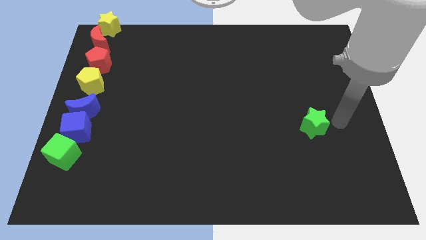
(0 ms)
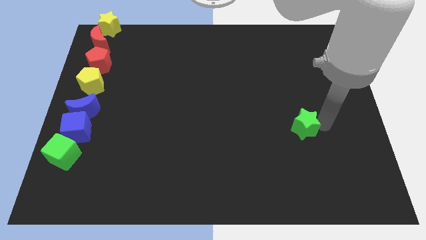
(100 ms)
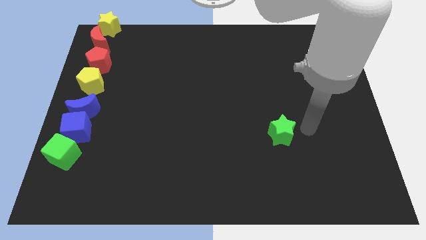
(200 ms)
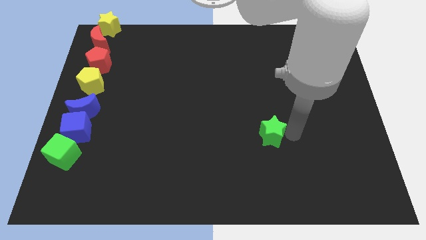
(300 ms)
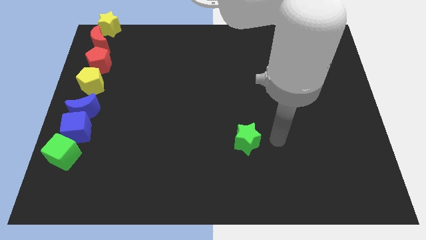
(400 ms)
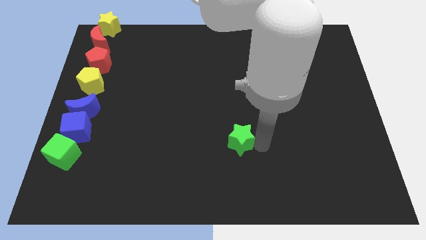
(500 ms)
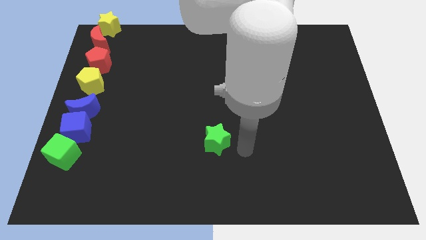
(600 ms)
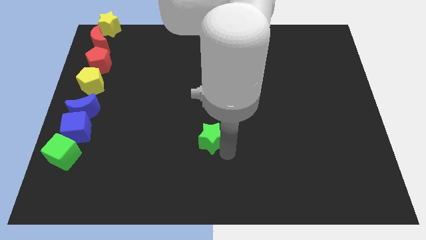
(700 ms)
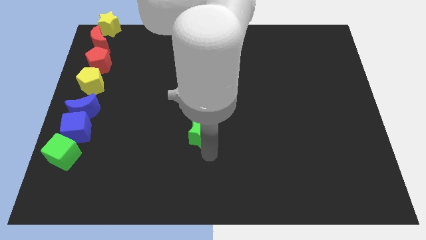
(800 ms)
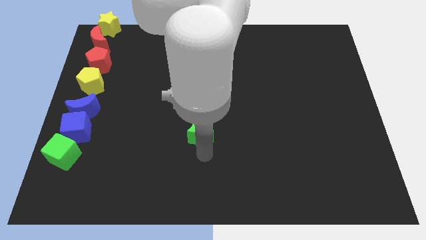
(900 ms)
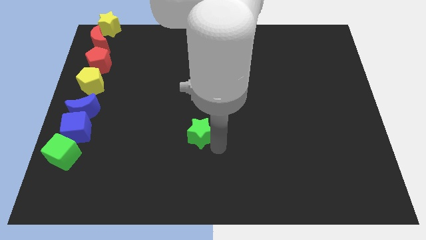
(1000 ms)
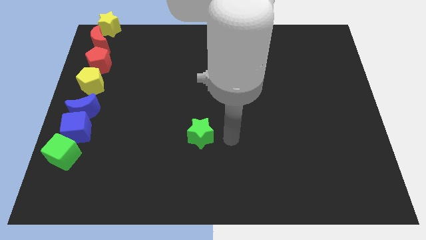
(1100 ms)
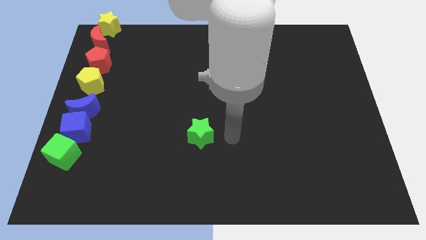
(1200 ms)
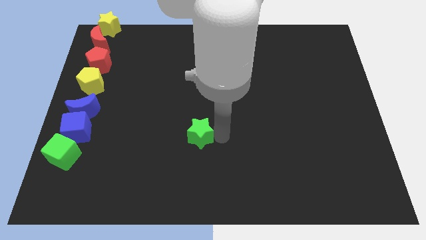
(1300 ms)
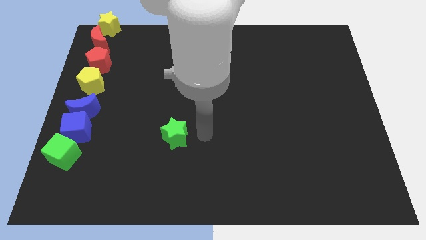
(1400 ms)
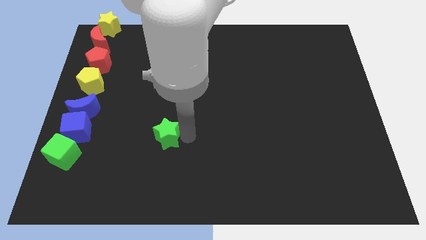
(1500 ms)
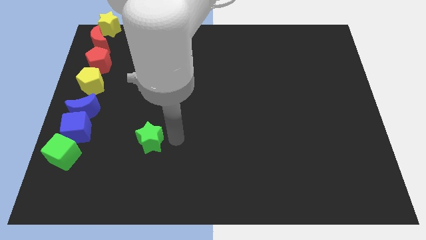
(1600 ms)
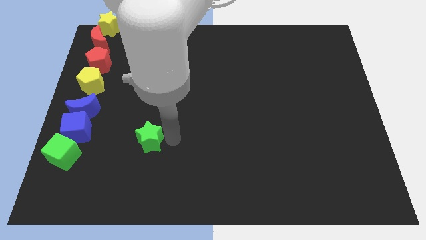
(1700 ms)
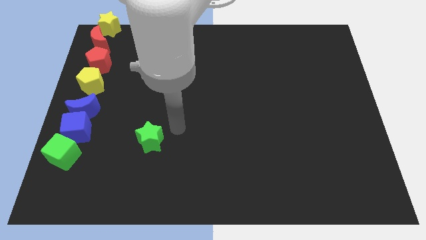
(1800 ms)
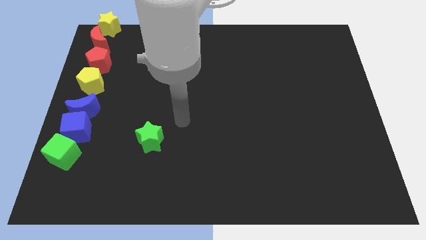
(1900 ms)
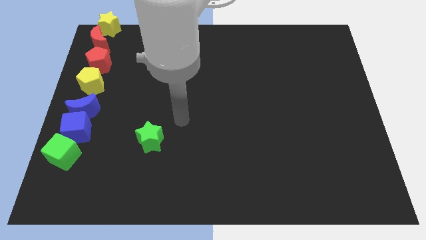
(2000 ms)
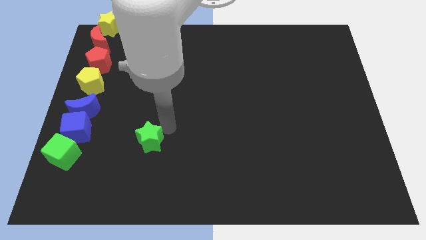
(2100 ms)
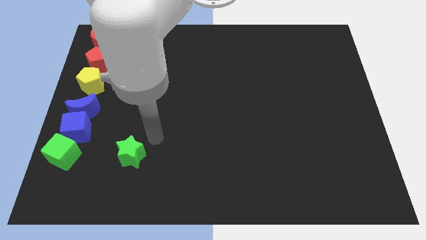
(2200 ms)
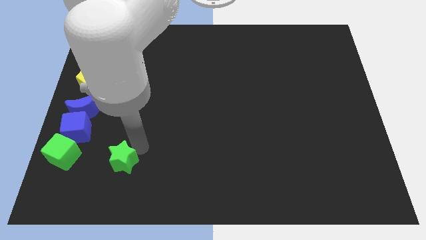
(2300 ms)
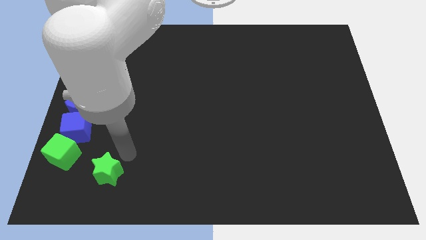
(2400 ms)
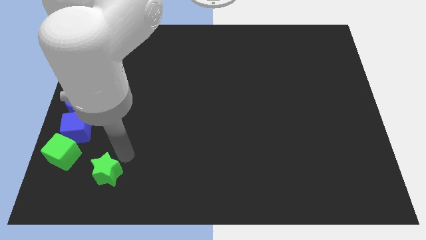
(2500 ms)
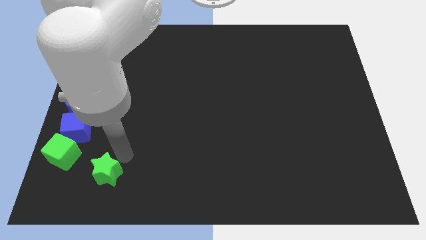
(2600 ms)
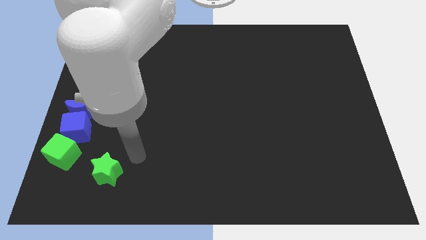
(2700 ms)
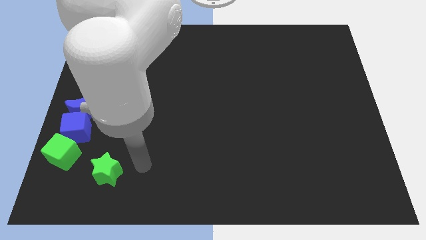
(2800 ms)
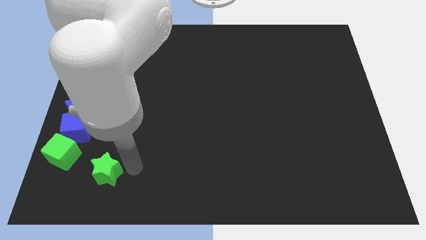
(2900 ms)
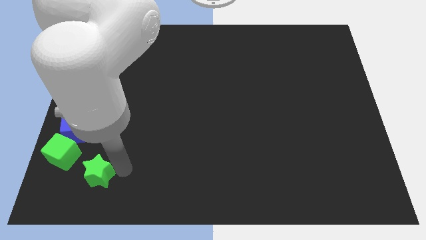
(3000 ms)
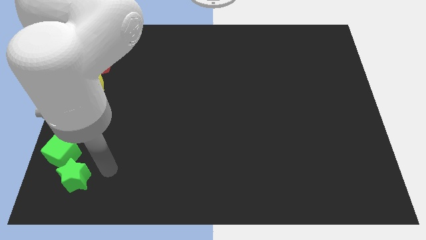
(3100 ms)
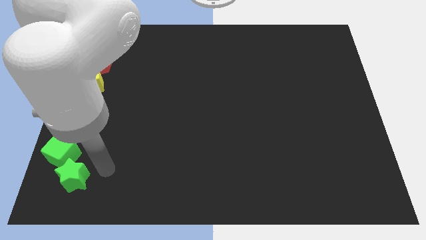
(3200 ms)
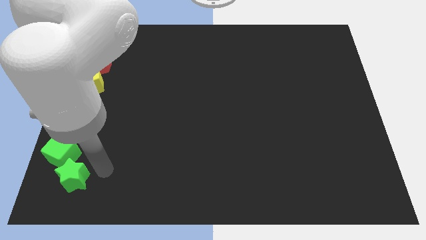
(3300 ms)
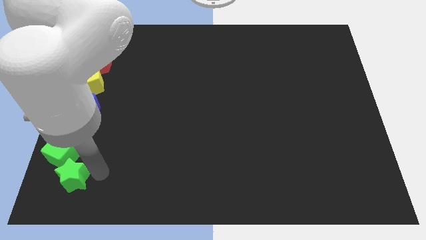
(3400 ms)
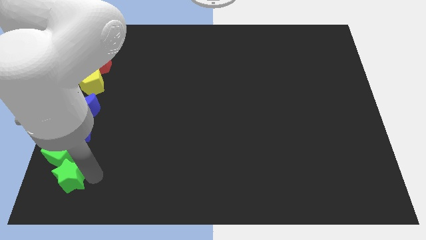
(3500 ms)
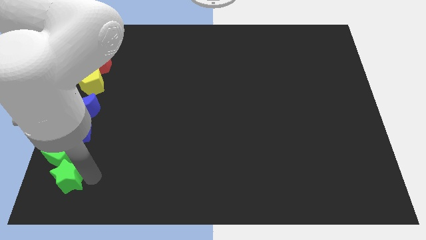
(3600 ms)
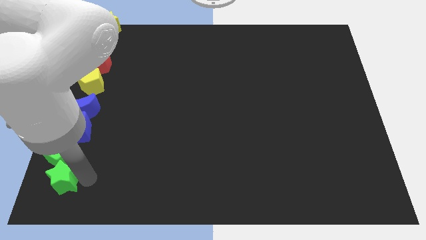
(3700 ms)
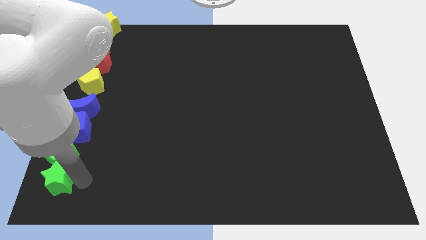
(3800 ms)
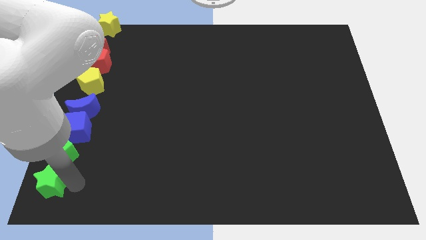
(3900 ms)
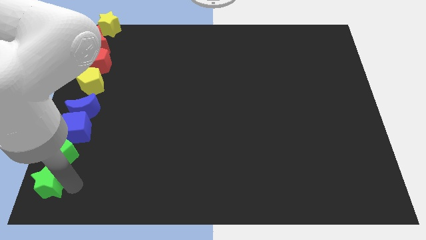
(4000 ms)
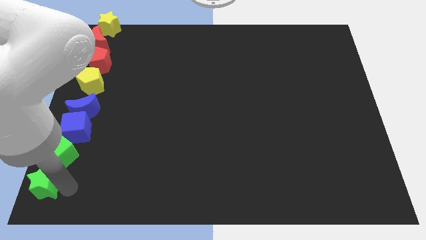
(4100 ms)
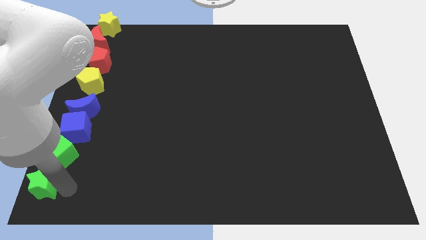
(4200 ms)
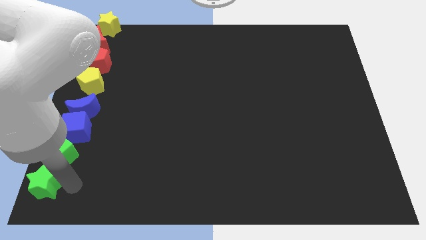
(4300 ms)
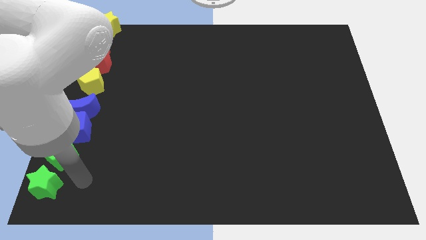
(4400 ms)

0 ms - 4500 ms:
place the green star below the green cube

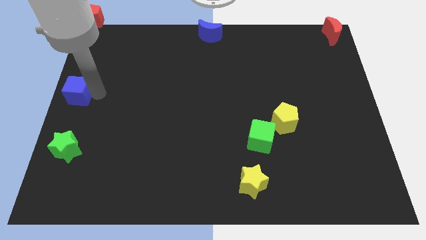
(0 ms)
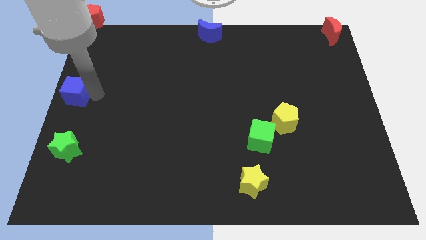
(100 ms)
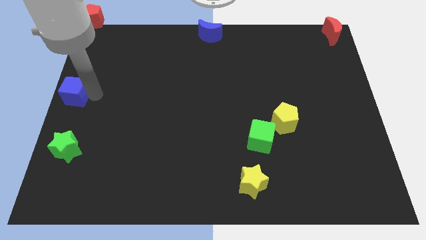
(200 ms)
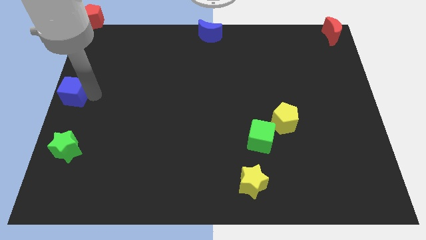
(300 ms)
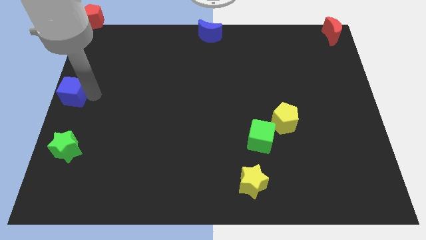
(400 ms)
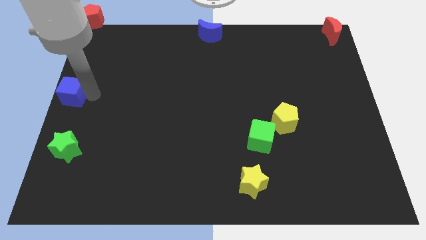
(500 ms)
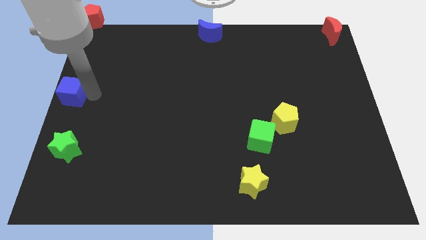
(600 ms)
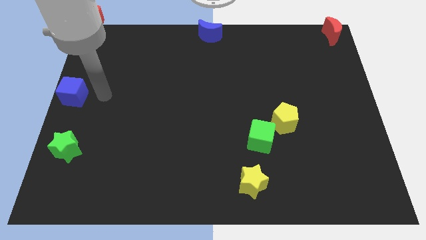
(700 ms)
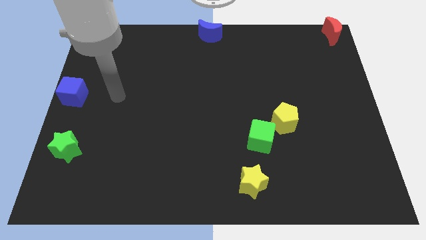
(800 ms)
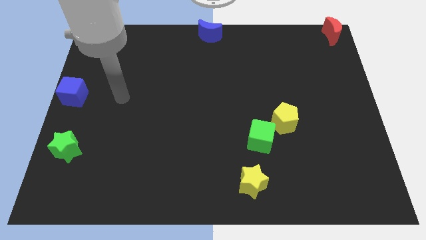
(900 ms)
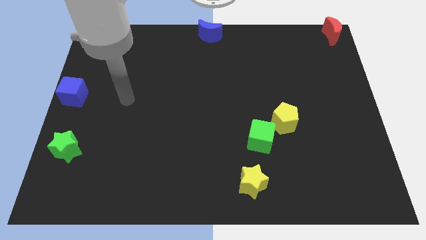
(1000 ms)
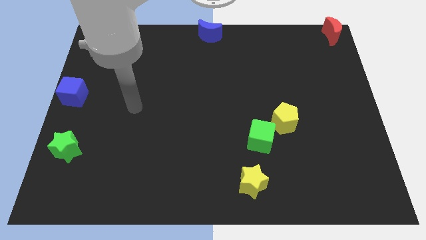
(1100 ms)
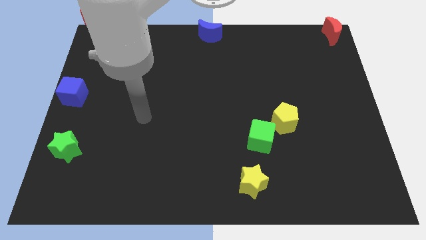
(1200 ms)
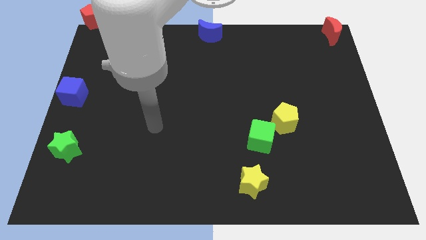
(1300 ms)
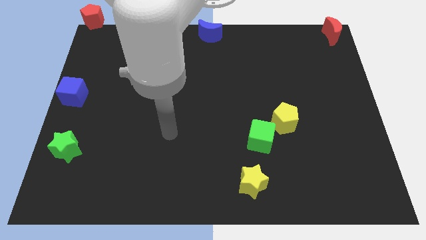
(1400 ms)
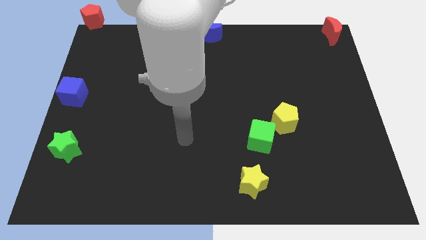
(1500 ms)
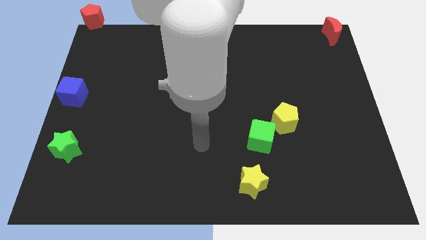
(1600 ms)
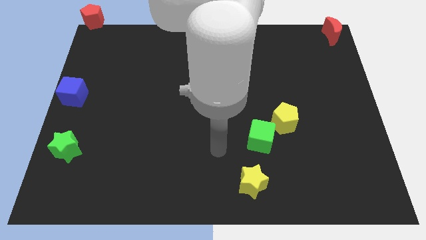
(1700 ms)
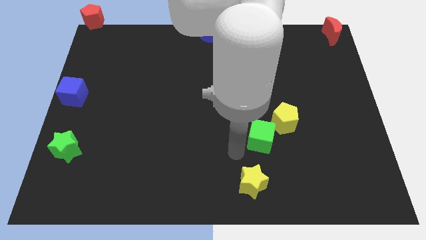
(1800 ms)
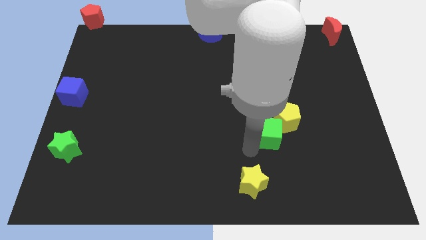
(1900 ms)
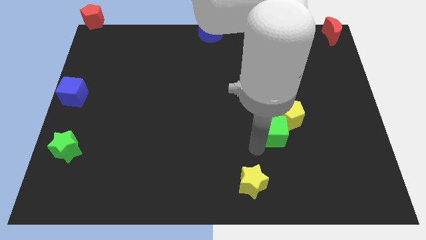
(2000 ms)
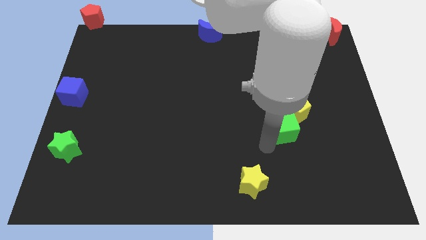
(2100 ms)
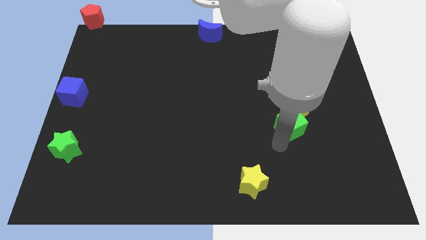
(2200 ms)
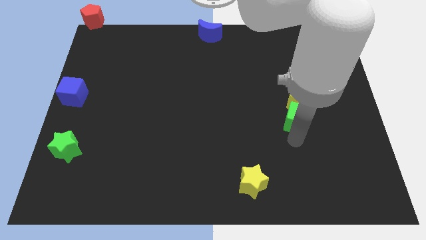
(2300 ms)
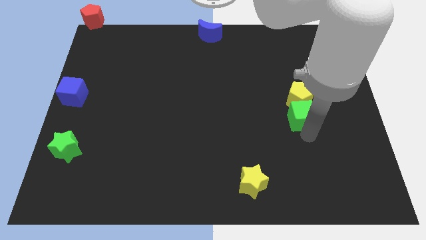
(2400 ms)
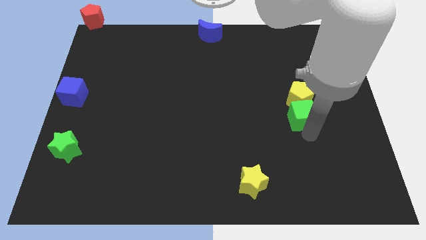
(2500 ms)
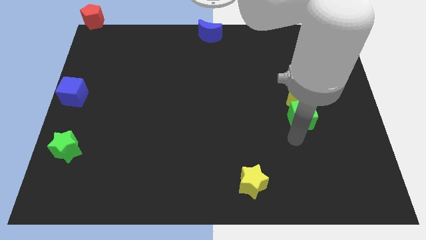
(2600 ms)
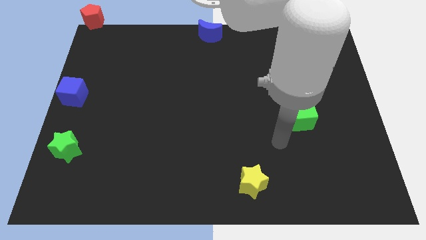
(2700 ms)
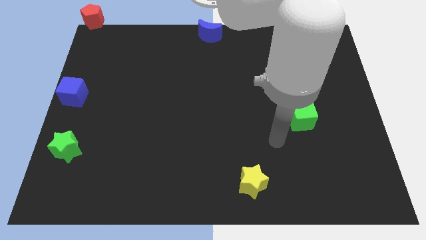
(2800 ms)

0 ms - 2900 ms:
place green cube below yellow pentagon

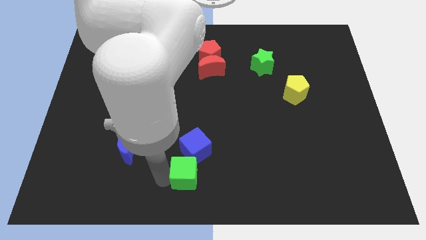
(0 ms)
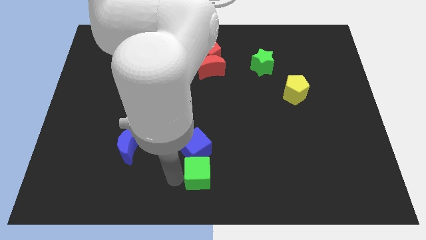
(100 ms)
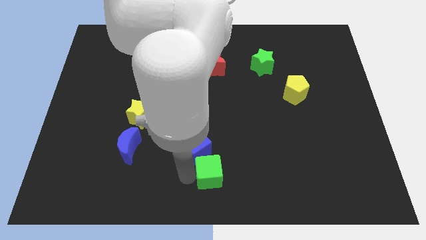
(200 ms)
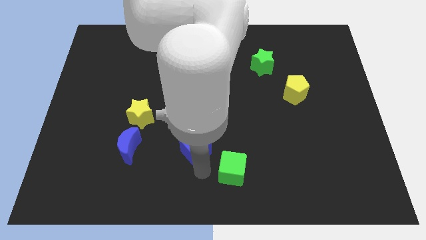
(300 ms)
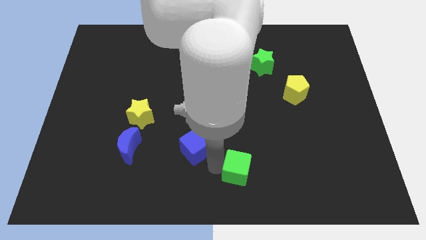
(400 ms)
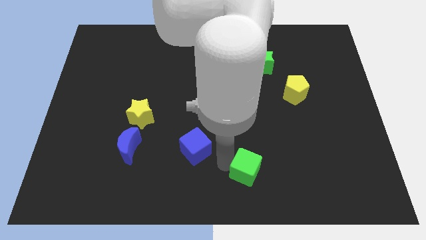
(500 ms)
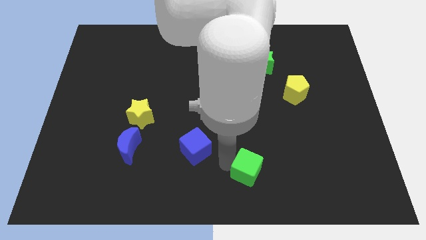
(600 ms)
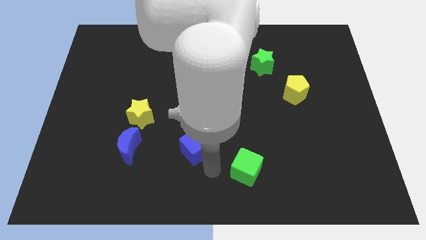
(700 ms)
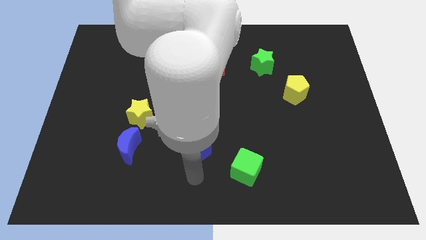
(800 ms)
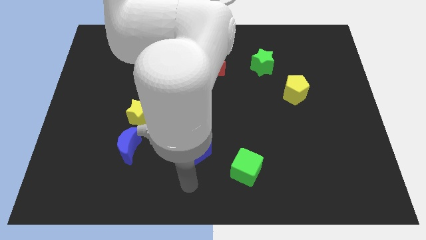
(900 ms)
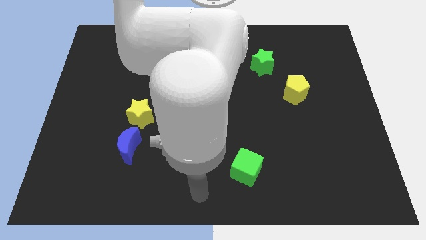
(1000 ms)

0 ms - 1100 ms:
separate the green cube from the blue cube

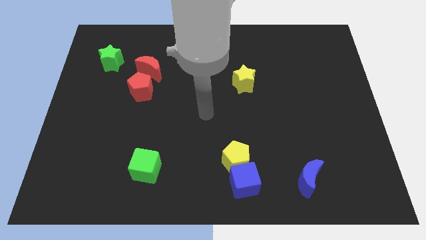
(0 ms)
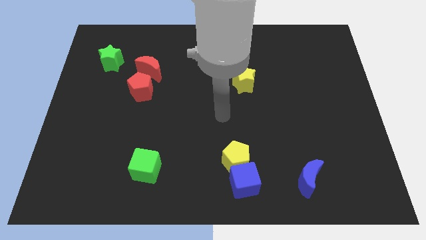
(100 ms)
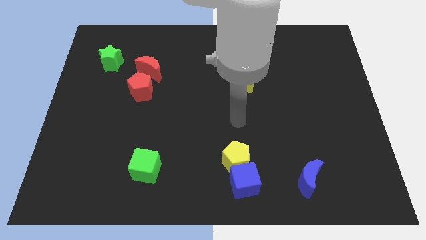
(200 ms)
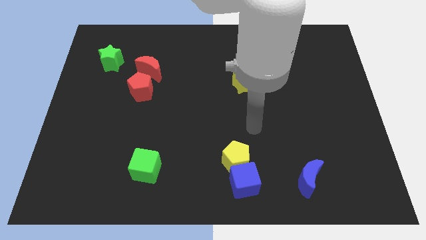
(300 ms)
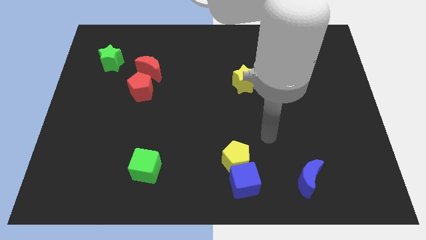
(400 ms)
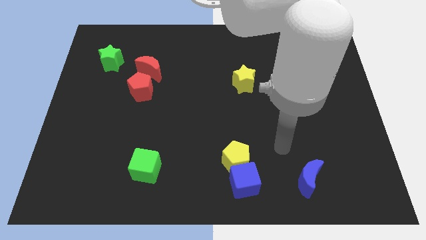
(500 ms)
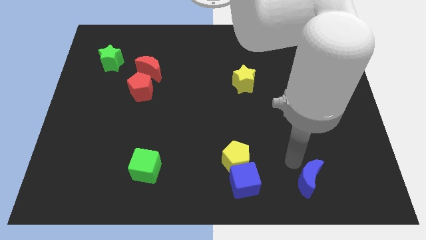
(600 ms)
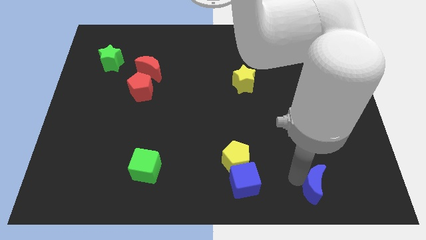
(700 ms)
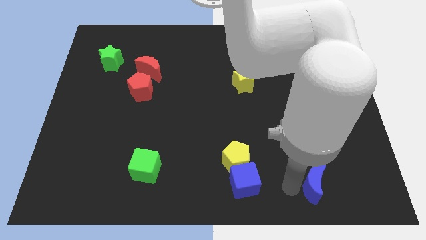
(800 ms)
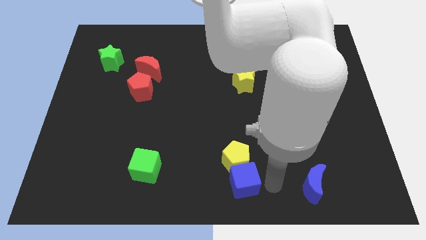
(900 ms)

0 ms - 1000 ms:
move your arm away from the green cube
